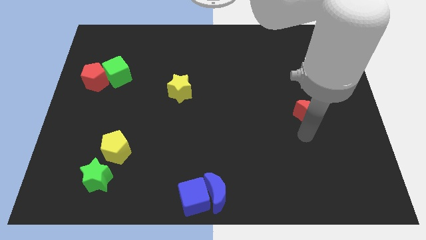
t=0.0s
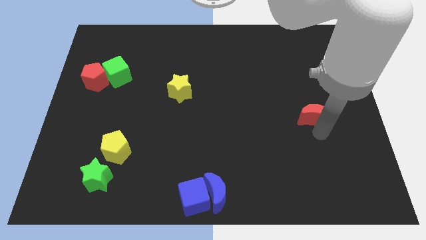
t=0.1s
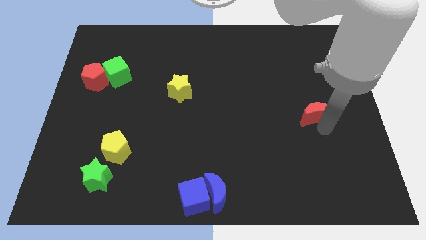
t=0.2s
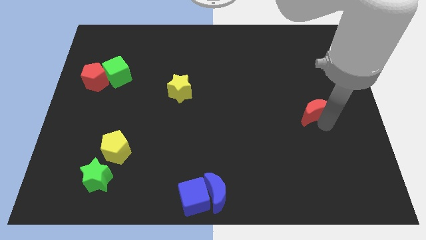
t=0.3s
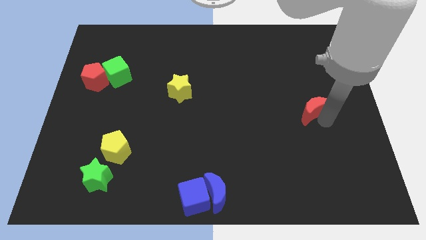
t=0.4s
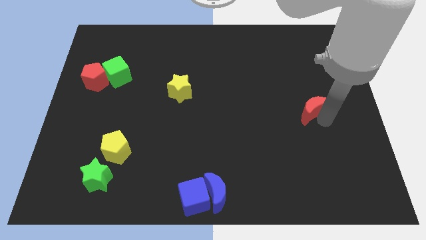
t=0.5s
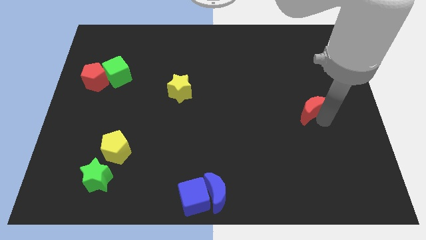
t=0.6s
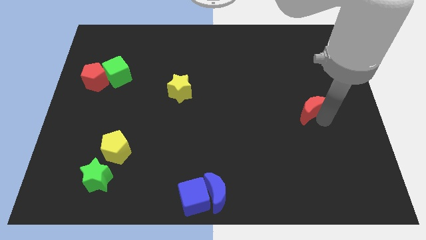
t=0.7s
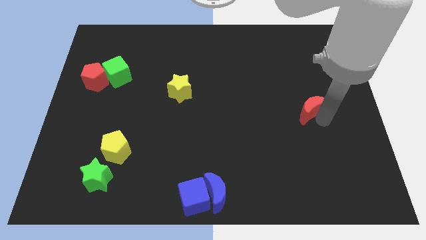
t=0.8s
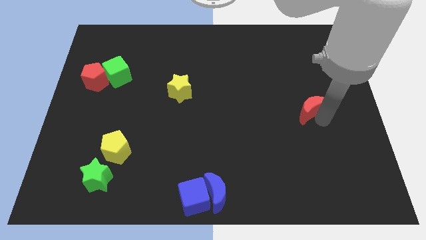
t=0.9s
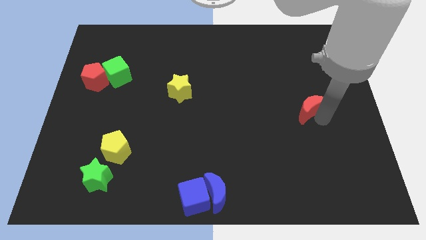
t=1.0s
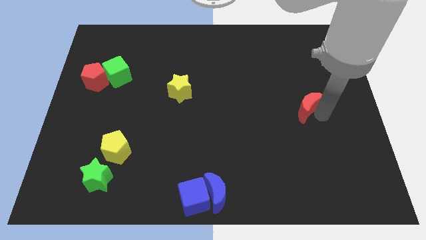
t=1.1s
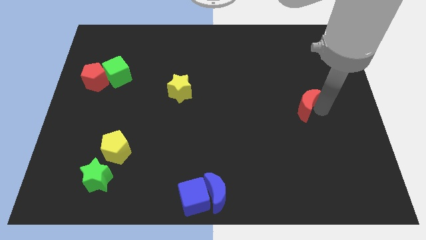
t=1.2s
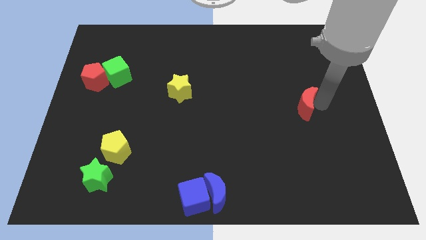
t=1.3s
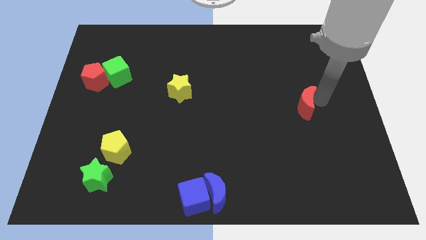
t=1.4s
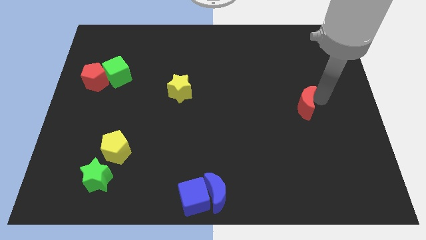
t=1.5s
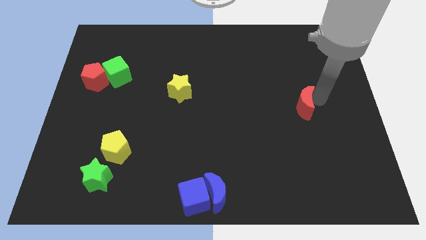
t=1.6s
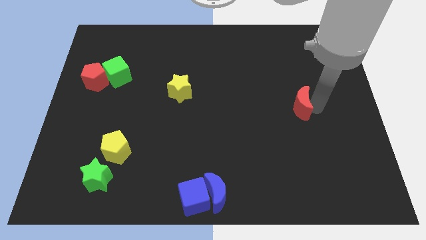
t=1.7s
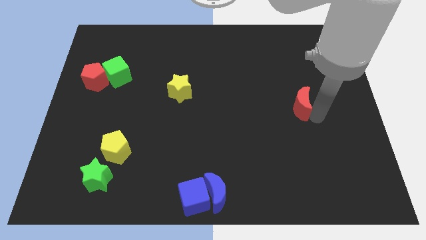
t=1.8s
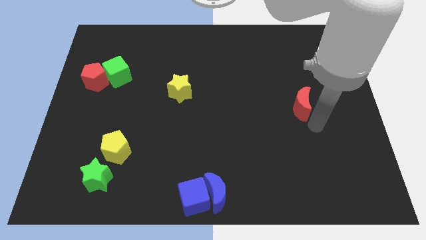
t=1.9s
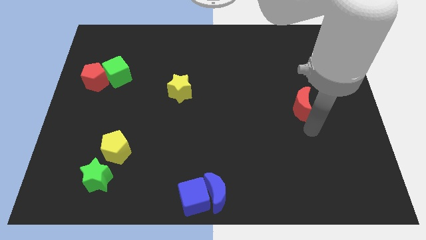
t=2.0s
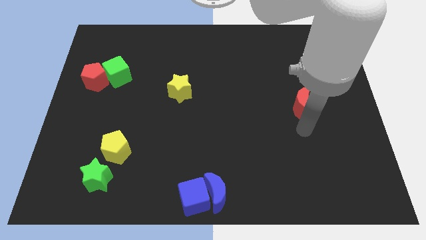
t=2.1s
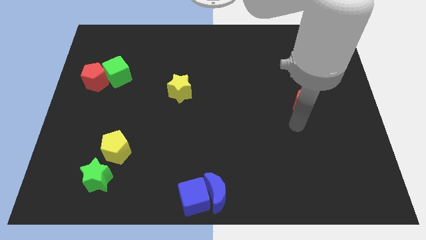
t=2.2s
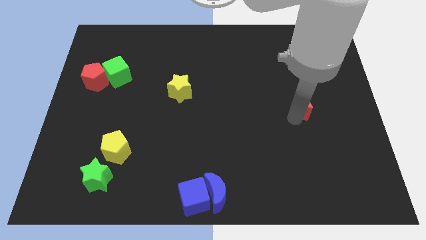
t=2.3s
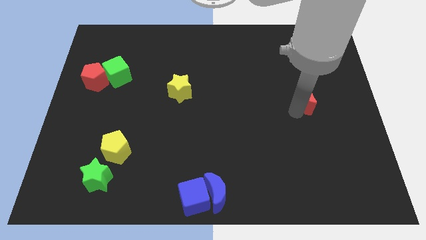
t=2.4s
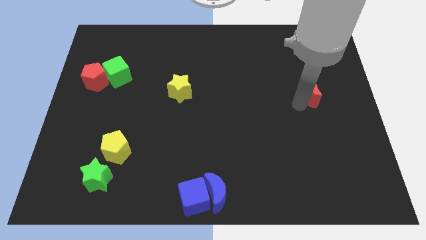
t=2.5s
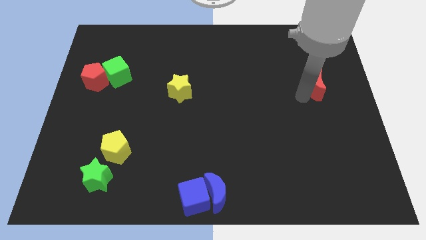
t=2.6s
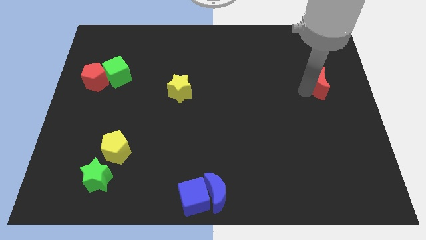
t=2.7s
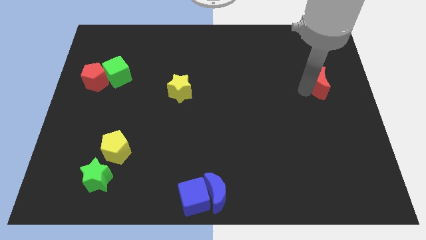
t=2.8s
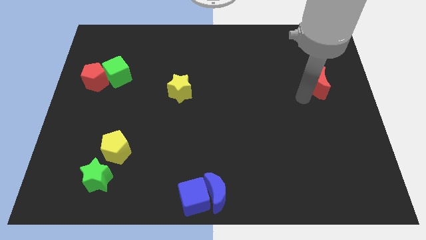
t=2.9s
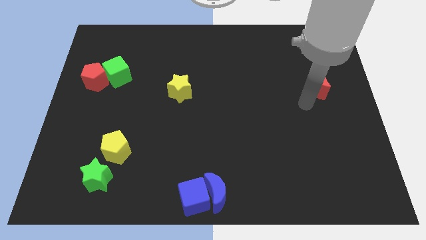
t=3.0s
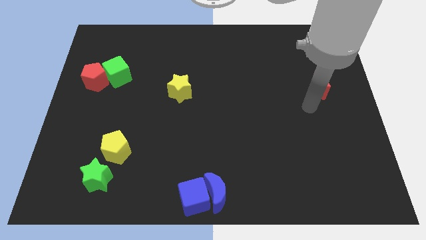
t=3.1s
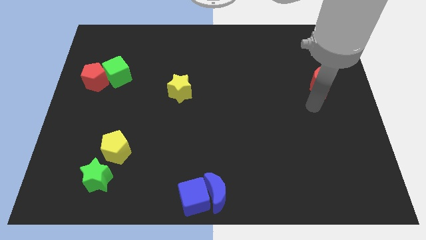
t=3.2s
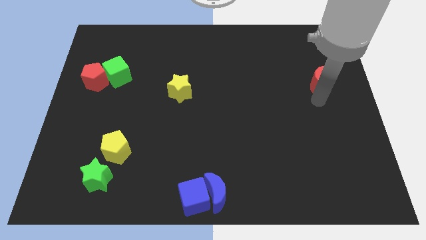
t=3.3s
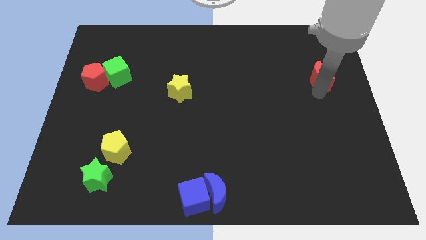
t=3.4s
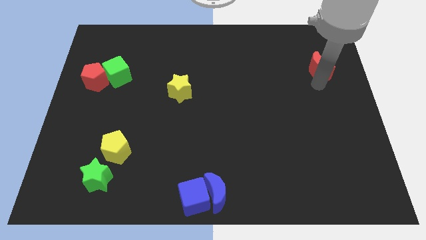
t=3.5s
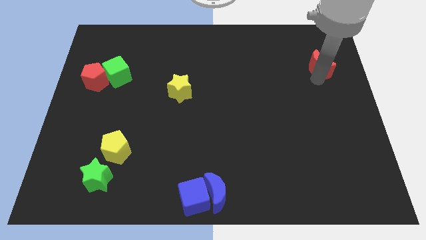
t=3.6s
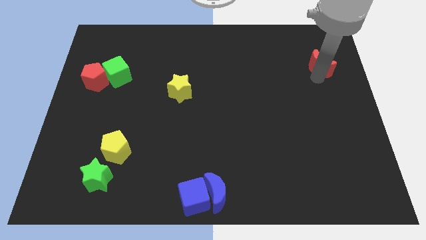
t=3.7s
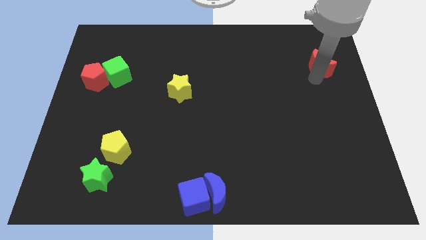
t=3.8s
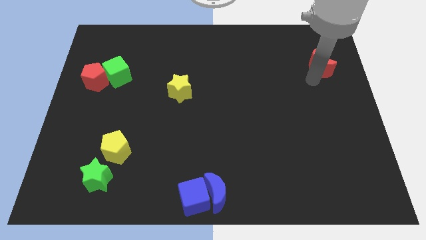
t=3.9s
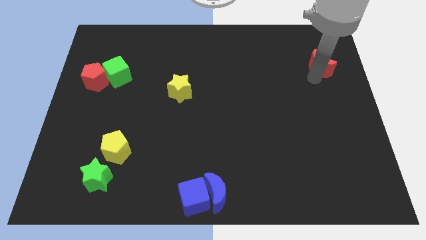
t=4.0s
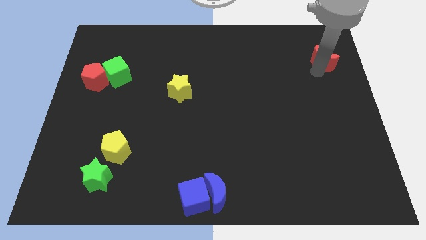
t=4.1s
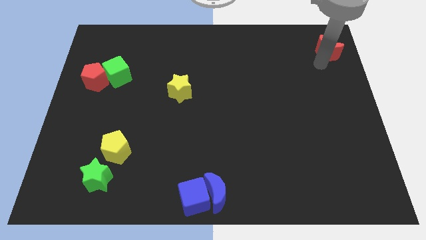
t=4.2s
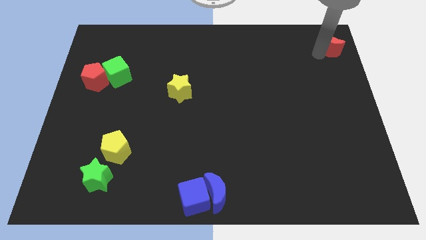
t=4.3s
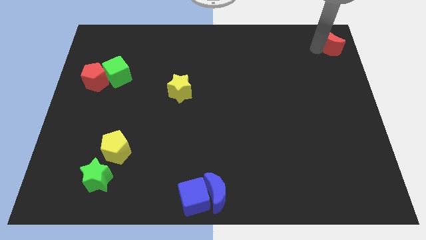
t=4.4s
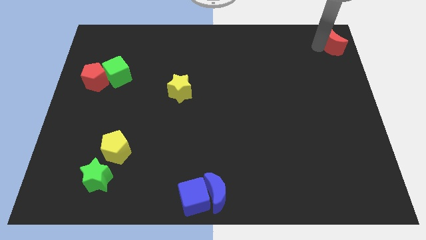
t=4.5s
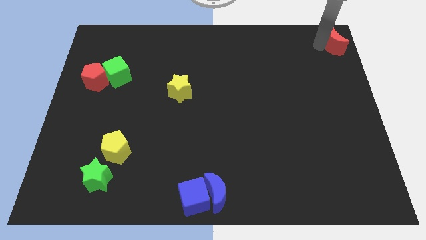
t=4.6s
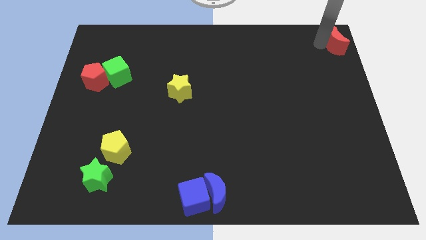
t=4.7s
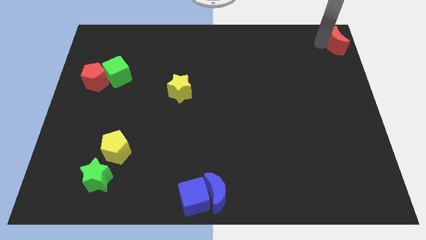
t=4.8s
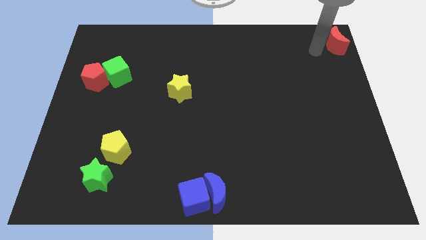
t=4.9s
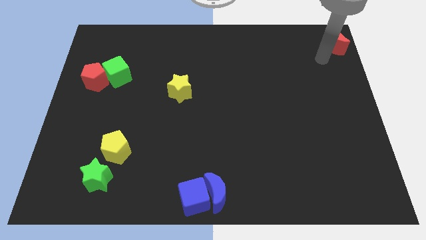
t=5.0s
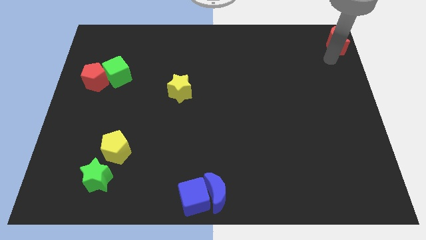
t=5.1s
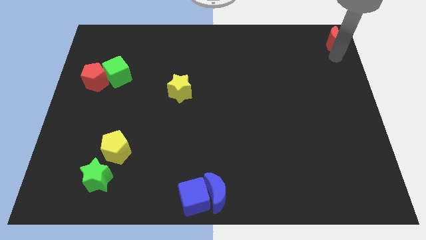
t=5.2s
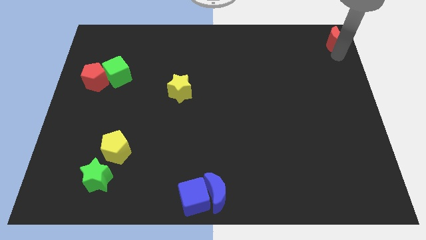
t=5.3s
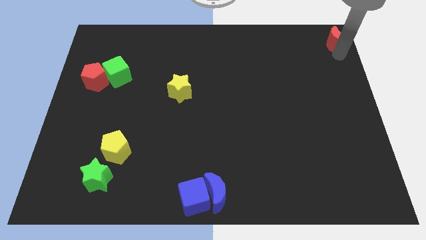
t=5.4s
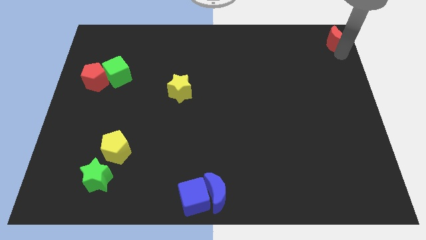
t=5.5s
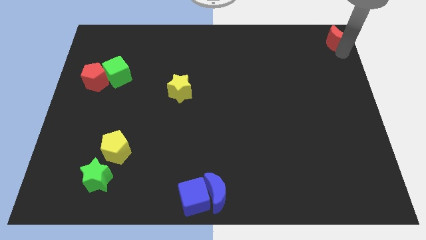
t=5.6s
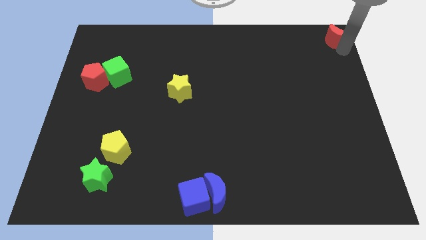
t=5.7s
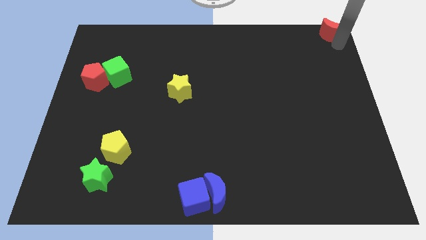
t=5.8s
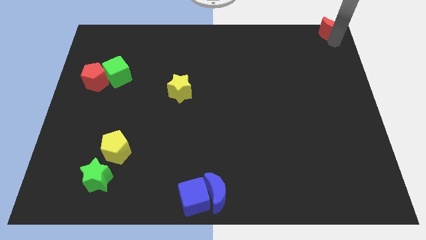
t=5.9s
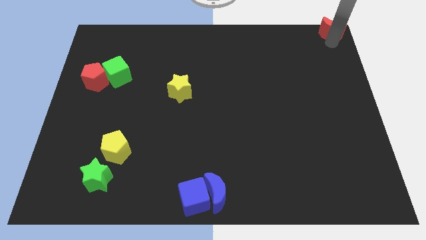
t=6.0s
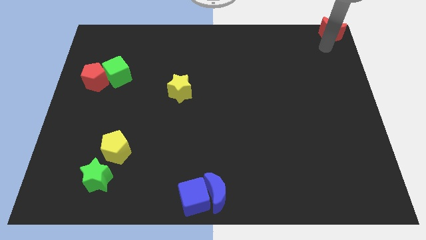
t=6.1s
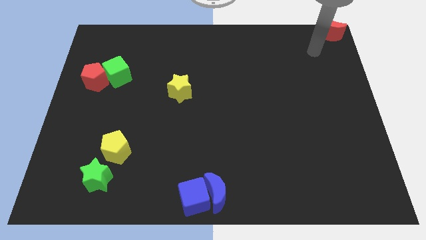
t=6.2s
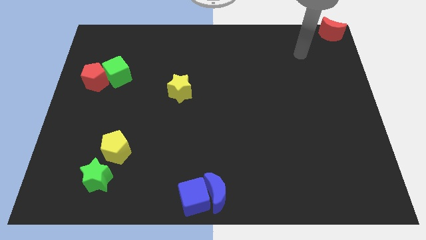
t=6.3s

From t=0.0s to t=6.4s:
place the red crescent at the top right corner of the board

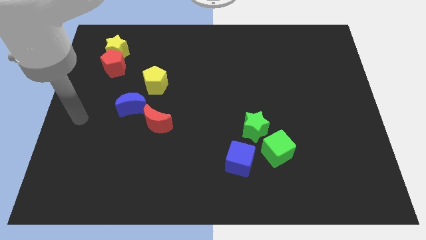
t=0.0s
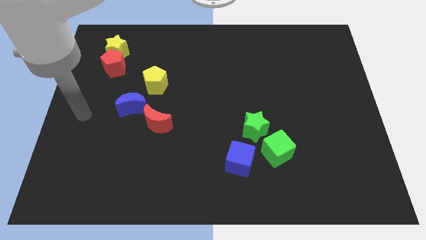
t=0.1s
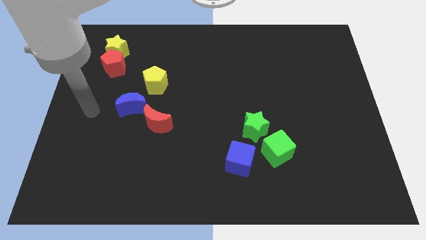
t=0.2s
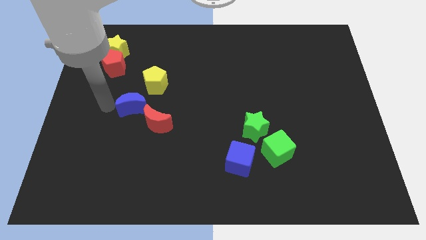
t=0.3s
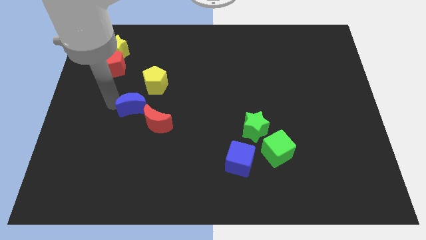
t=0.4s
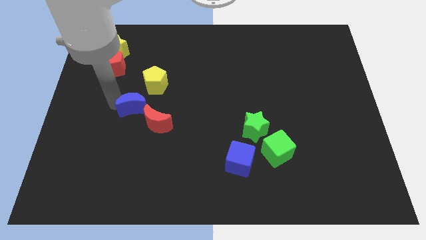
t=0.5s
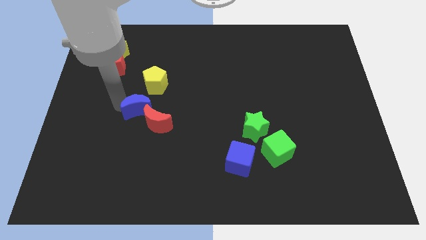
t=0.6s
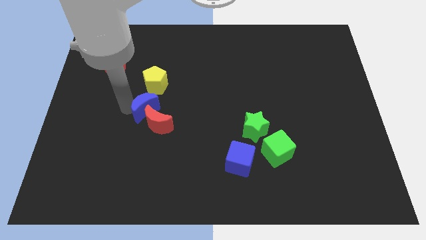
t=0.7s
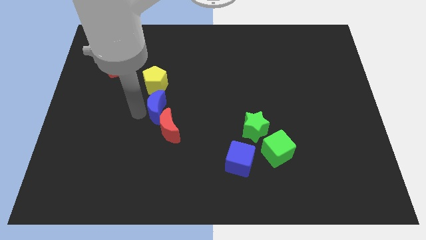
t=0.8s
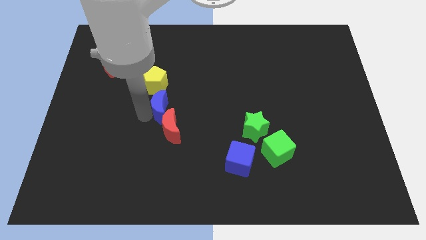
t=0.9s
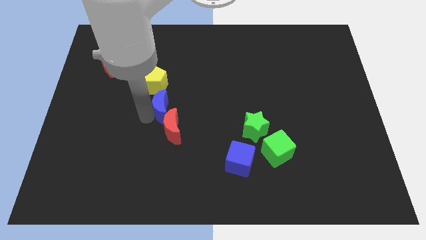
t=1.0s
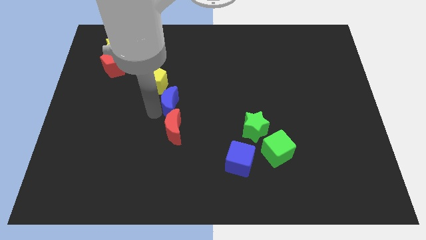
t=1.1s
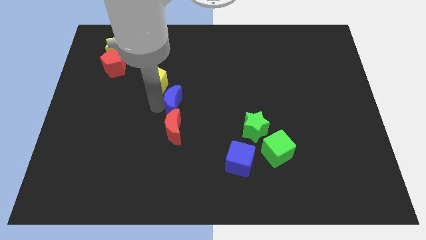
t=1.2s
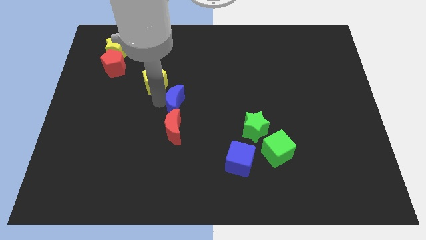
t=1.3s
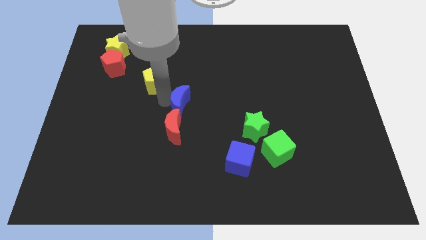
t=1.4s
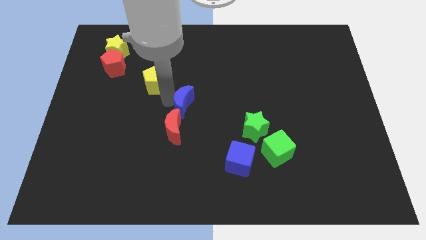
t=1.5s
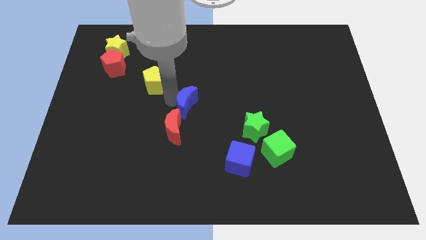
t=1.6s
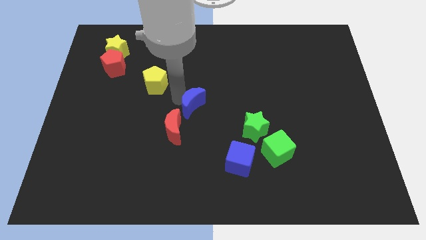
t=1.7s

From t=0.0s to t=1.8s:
move the blue moon to the center of the board

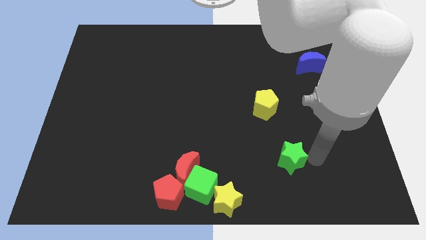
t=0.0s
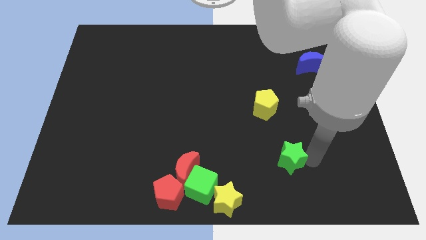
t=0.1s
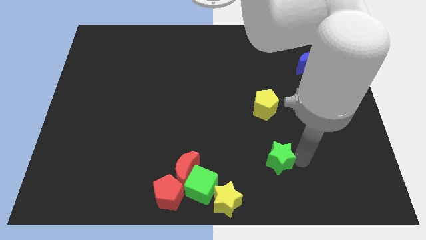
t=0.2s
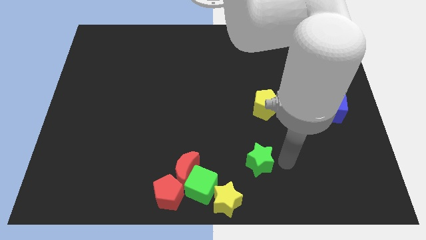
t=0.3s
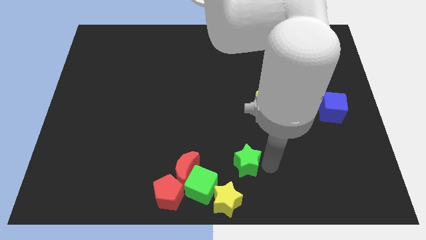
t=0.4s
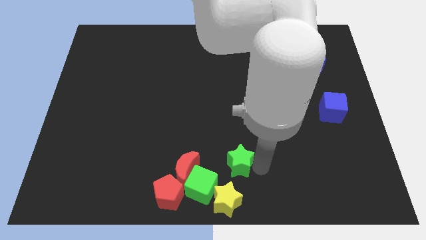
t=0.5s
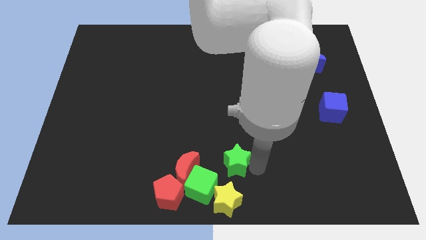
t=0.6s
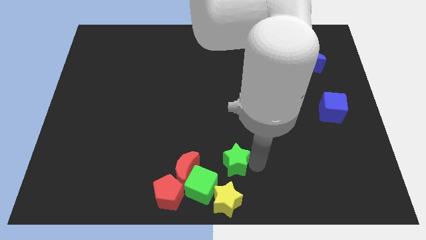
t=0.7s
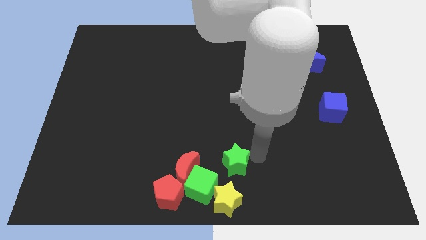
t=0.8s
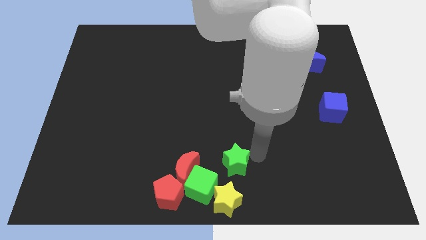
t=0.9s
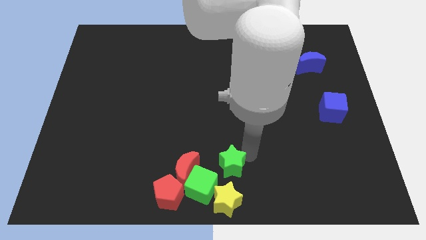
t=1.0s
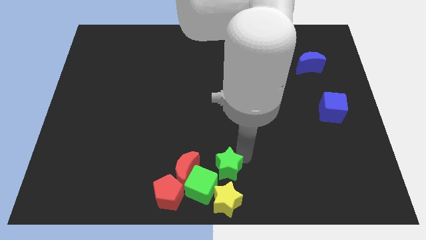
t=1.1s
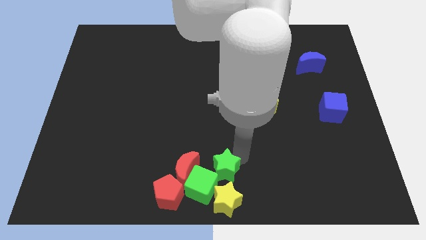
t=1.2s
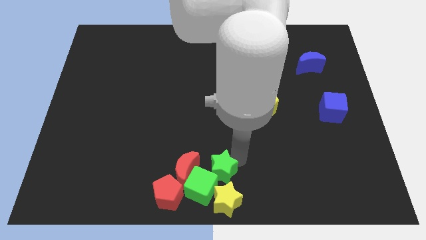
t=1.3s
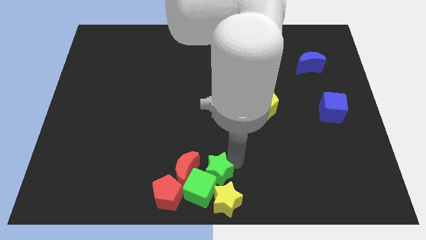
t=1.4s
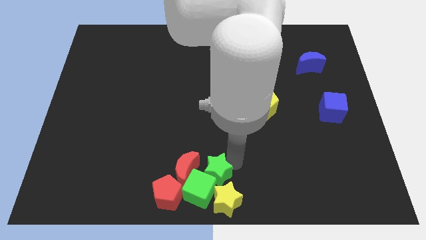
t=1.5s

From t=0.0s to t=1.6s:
drag the green star into the top side of the green cube
